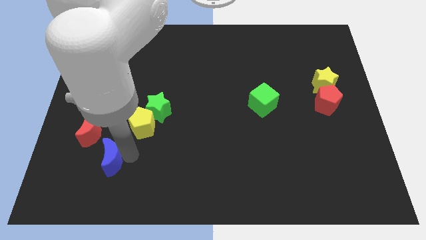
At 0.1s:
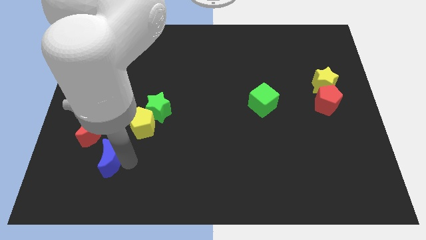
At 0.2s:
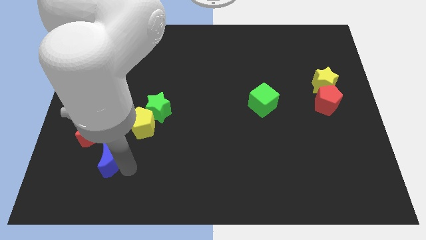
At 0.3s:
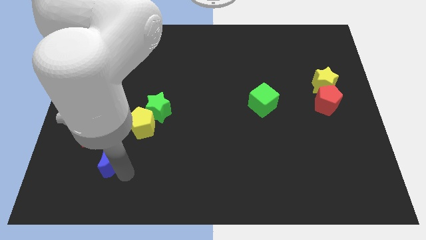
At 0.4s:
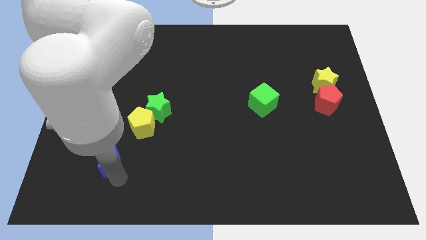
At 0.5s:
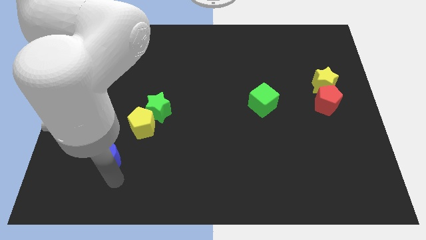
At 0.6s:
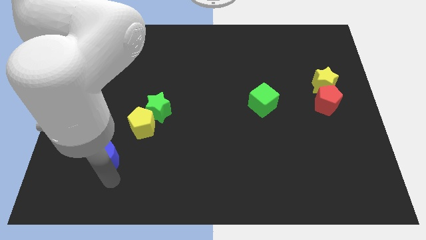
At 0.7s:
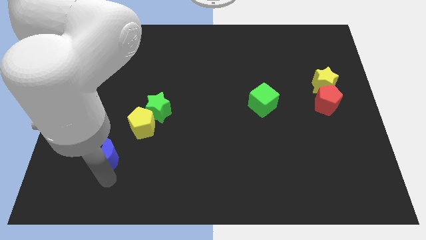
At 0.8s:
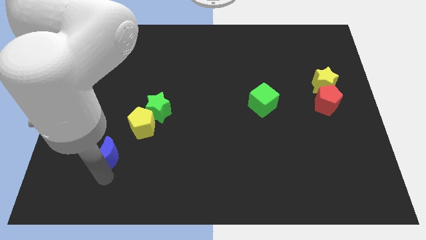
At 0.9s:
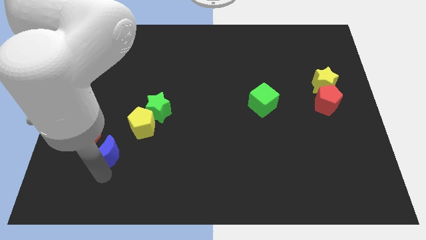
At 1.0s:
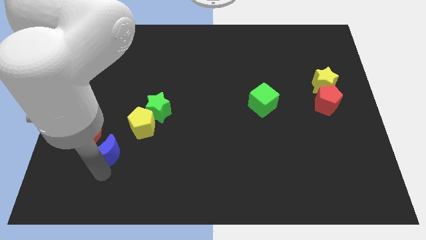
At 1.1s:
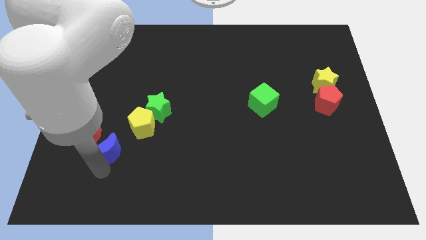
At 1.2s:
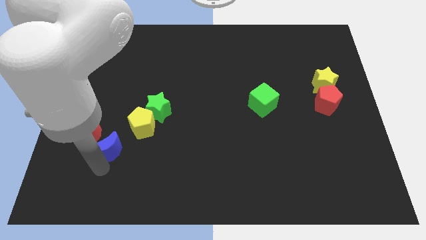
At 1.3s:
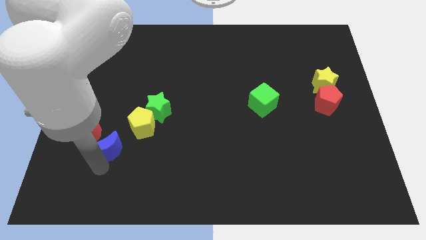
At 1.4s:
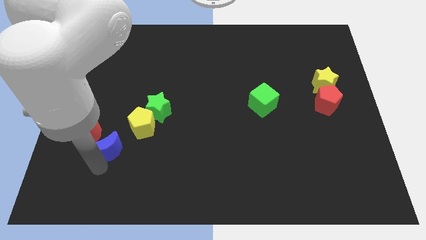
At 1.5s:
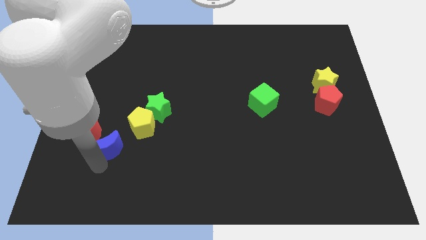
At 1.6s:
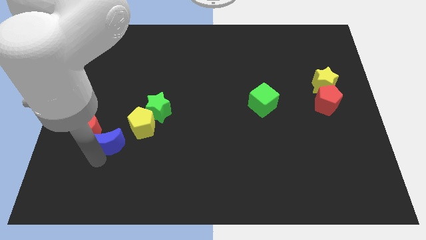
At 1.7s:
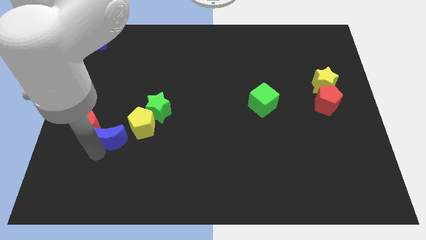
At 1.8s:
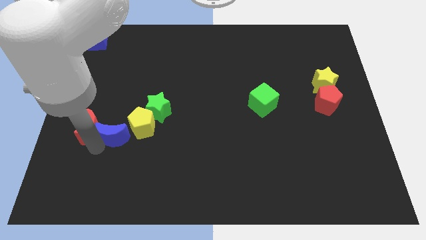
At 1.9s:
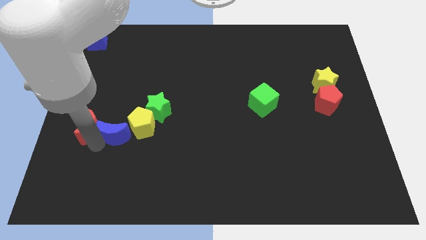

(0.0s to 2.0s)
put the blue moon right to the red moon

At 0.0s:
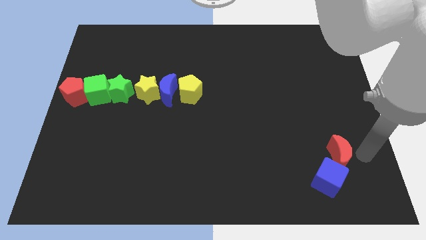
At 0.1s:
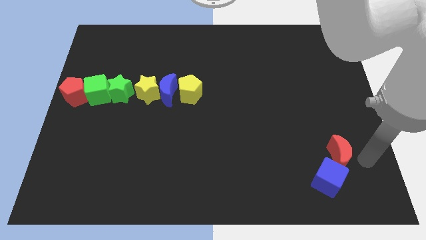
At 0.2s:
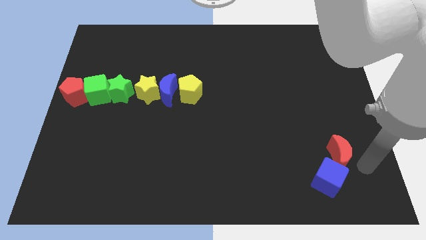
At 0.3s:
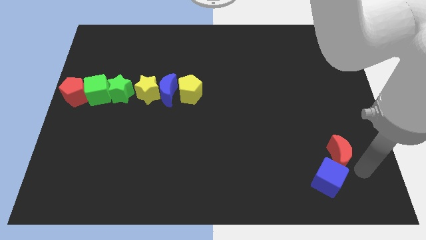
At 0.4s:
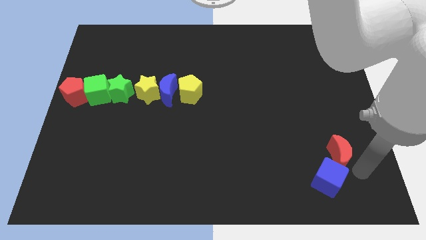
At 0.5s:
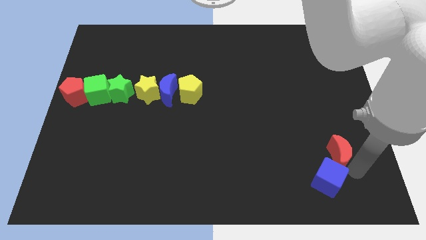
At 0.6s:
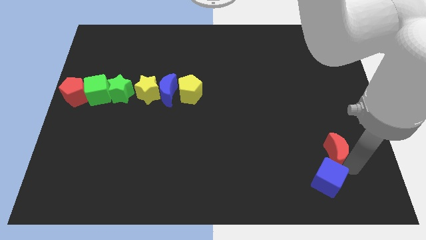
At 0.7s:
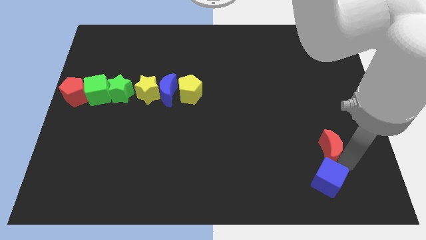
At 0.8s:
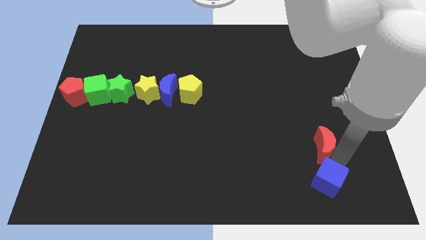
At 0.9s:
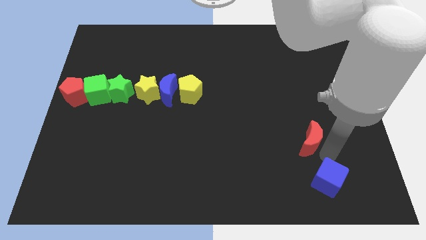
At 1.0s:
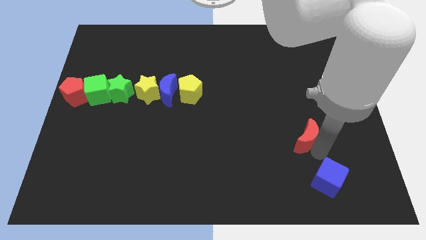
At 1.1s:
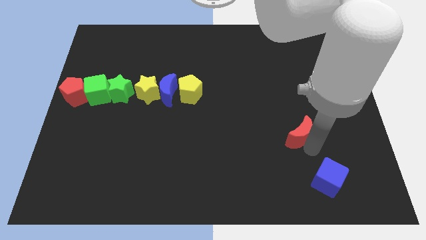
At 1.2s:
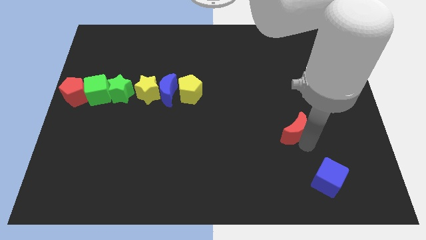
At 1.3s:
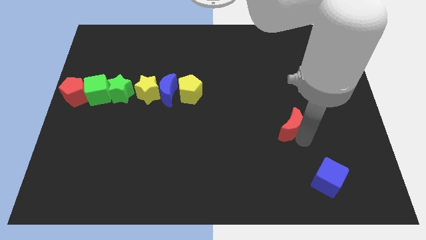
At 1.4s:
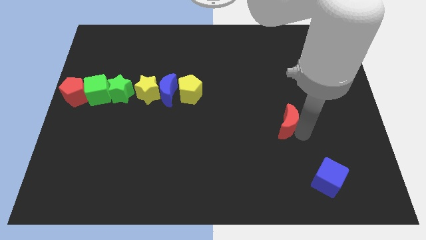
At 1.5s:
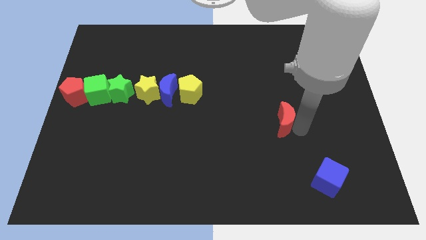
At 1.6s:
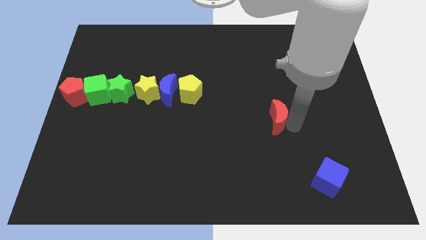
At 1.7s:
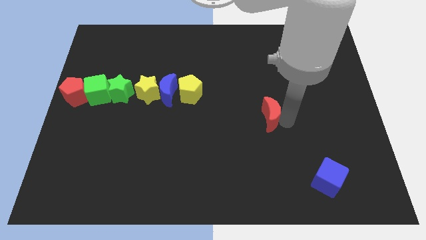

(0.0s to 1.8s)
move red moon slightly to the top of the board

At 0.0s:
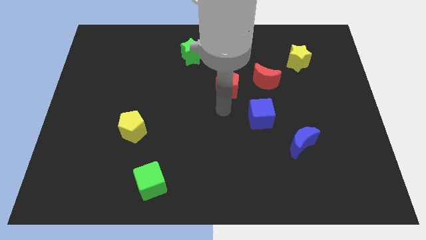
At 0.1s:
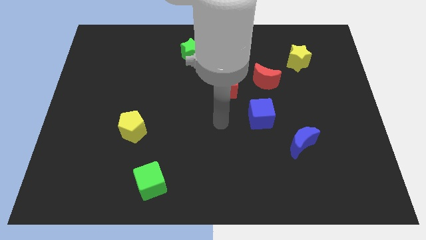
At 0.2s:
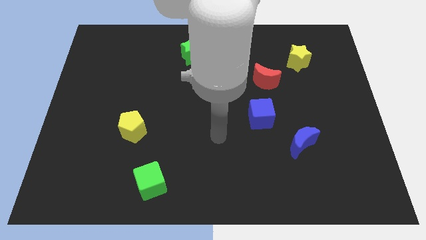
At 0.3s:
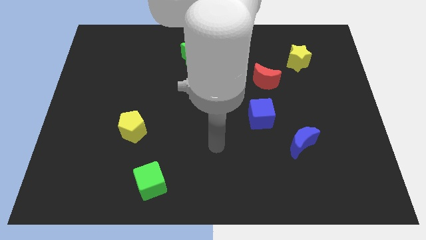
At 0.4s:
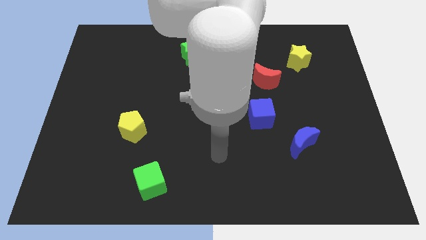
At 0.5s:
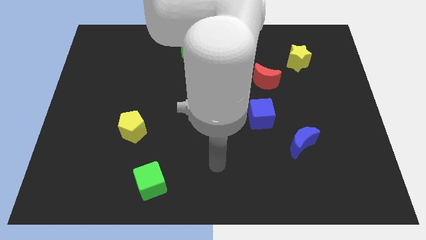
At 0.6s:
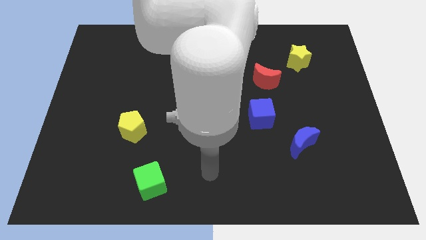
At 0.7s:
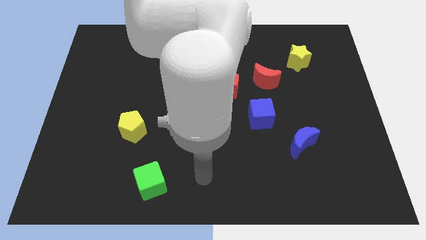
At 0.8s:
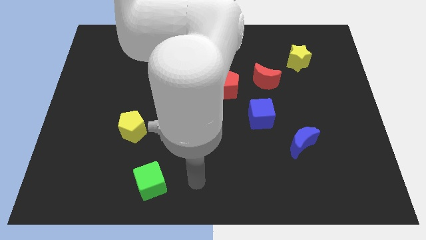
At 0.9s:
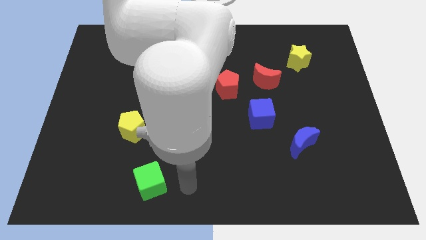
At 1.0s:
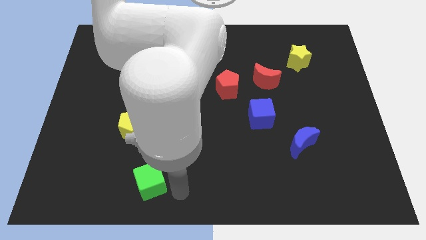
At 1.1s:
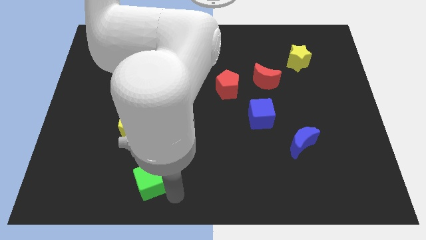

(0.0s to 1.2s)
move your arm to the bottom centre of the board

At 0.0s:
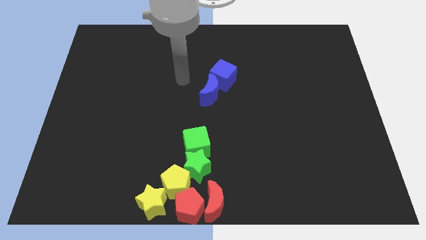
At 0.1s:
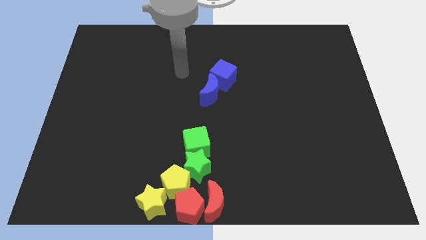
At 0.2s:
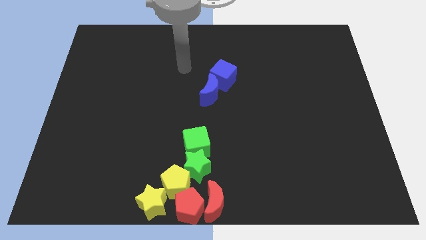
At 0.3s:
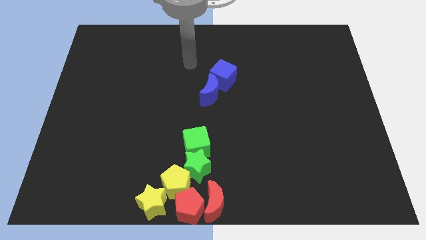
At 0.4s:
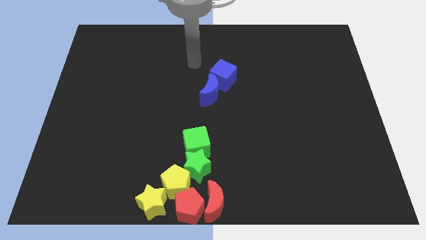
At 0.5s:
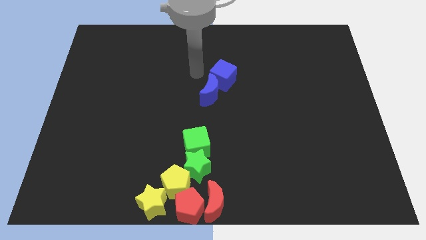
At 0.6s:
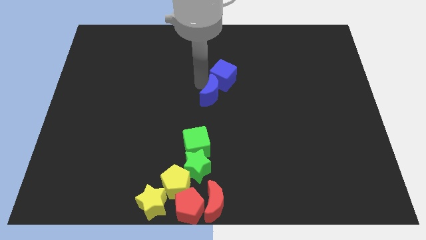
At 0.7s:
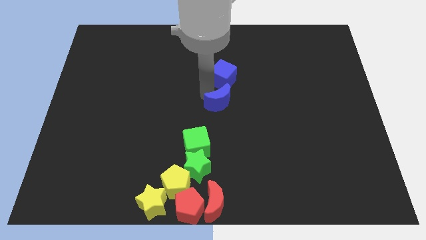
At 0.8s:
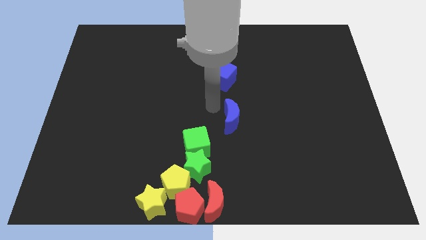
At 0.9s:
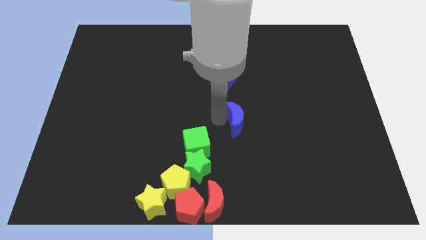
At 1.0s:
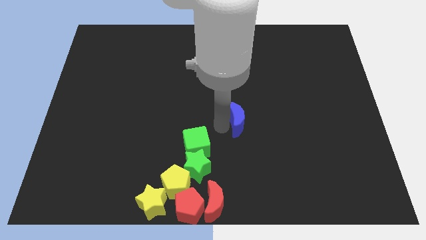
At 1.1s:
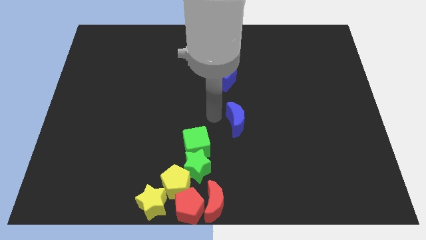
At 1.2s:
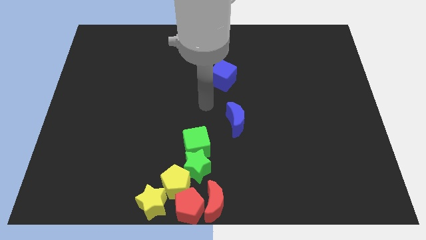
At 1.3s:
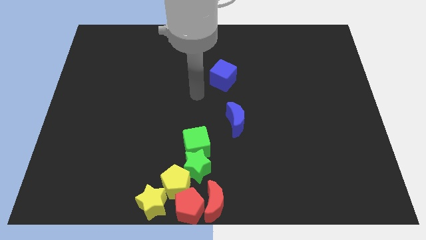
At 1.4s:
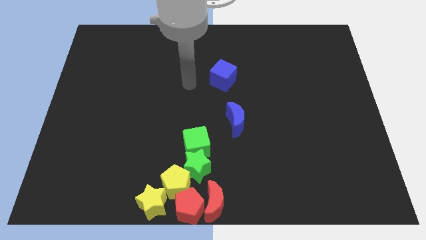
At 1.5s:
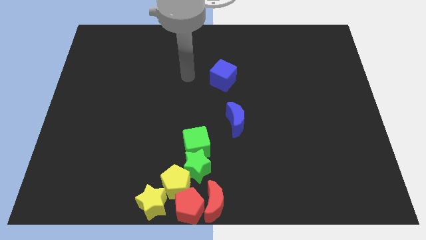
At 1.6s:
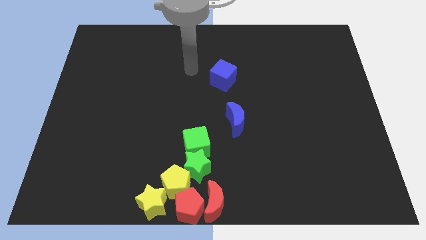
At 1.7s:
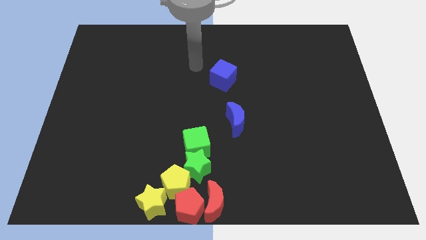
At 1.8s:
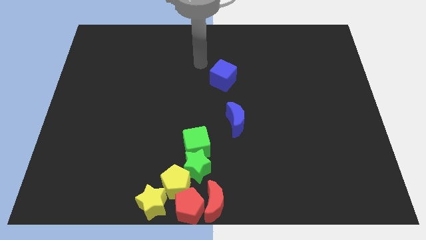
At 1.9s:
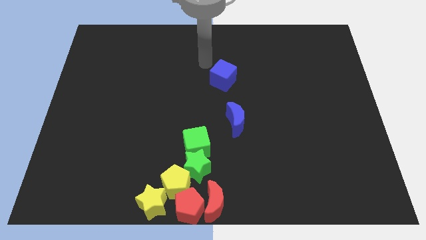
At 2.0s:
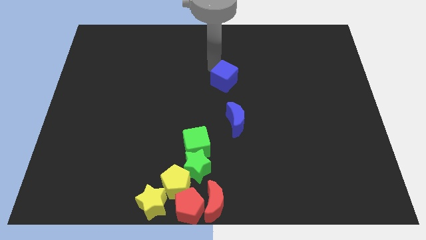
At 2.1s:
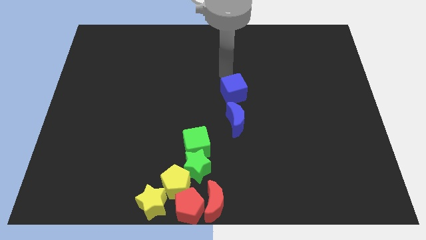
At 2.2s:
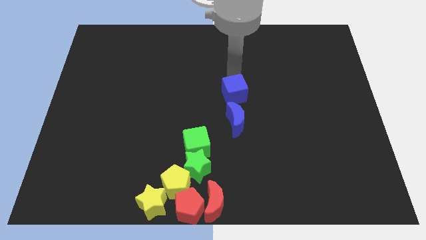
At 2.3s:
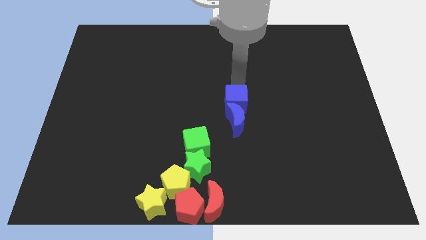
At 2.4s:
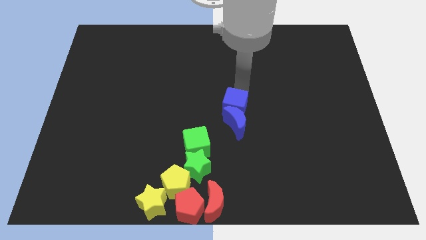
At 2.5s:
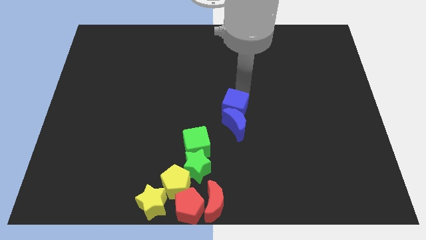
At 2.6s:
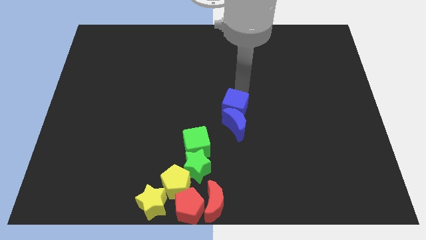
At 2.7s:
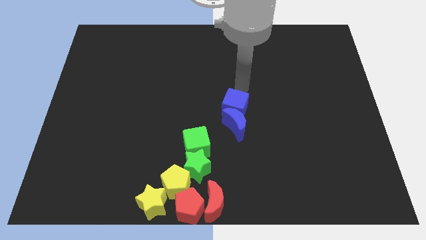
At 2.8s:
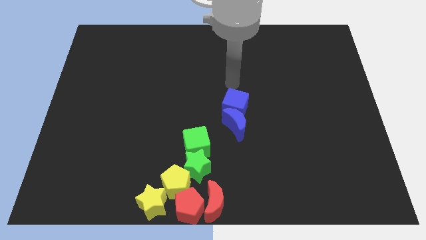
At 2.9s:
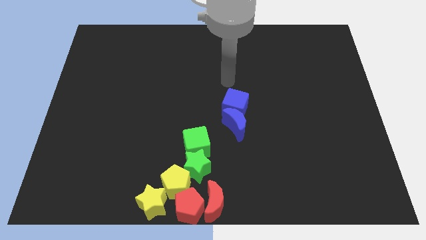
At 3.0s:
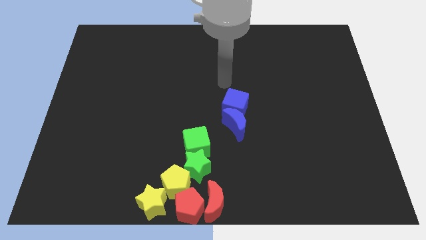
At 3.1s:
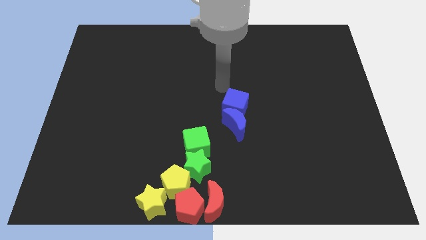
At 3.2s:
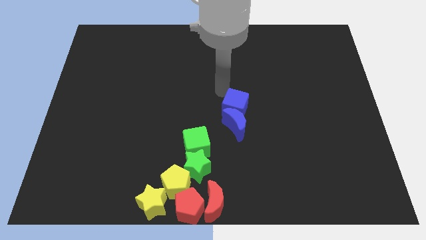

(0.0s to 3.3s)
move the blue blocks slightly down

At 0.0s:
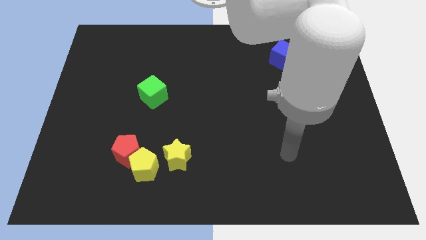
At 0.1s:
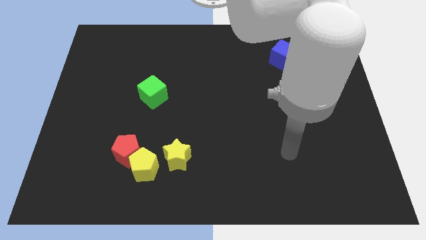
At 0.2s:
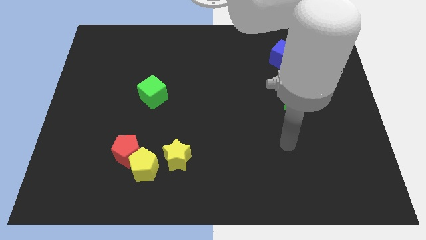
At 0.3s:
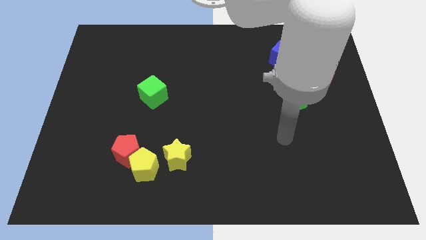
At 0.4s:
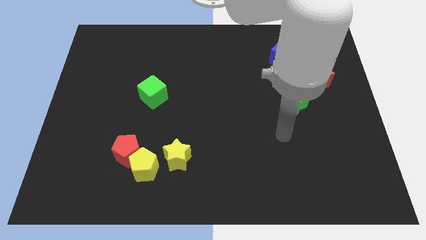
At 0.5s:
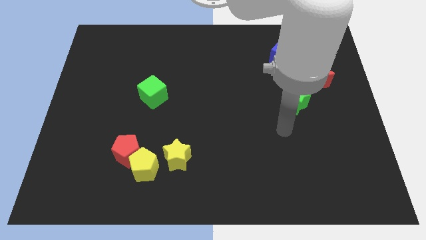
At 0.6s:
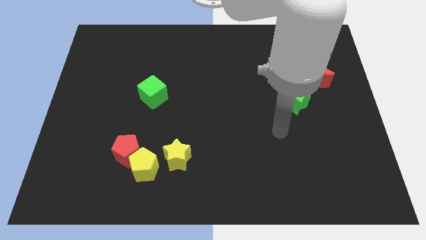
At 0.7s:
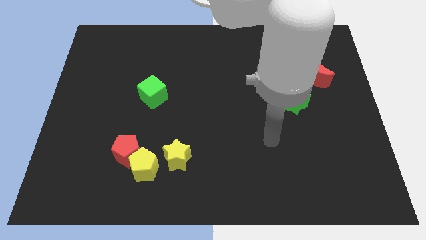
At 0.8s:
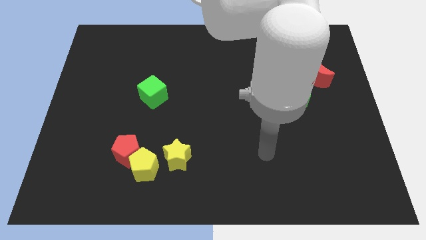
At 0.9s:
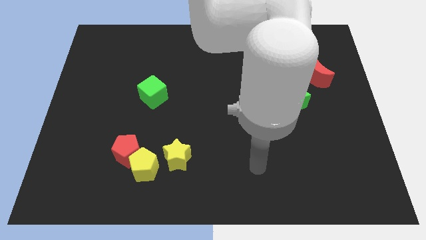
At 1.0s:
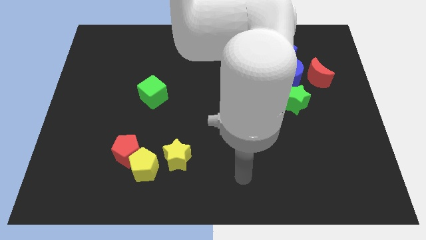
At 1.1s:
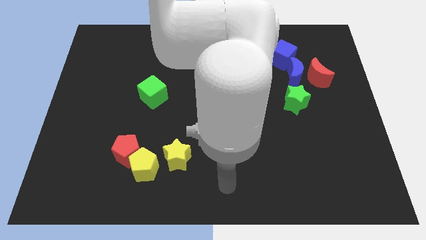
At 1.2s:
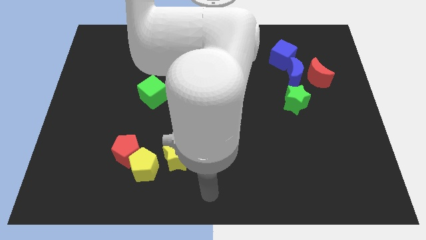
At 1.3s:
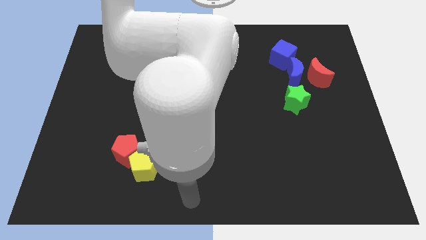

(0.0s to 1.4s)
point the arm to the bottom center of the board
